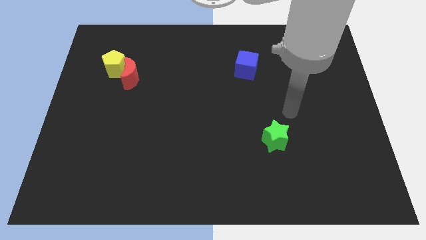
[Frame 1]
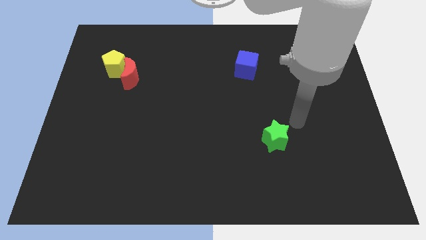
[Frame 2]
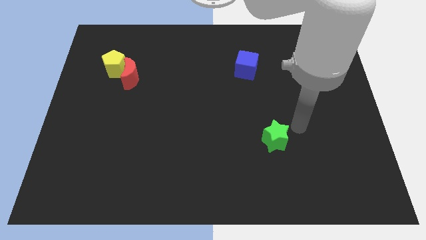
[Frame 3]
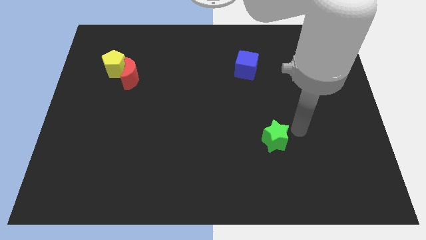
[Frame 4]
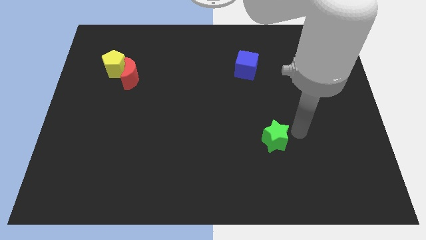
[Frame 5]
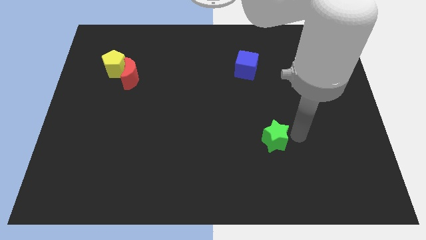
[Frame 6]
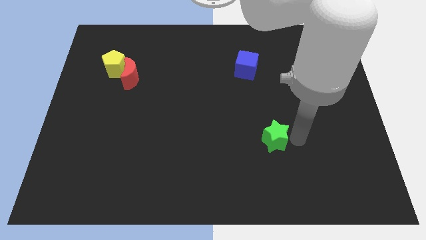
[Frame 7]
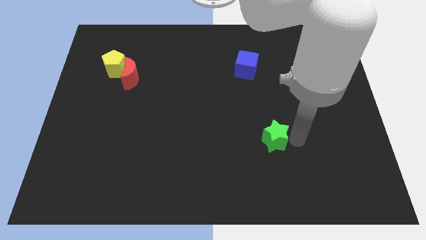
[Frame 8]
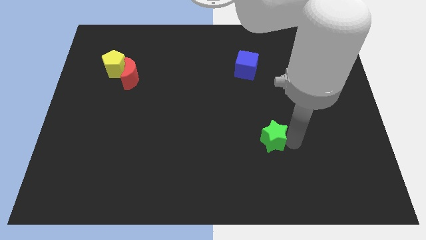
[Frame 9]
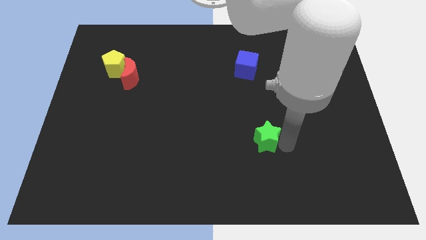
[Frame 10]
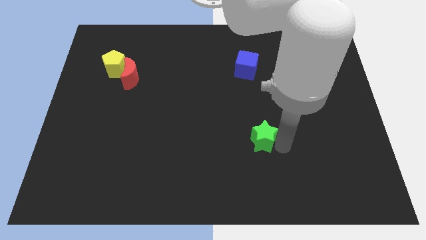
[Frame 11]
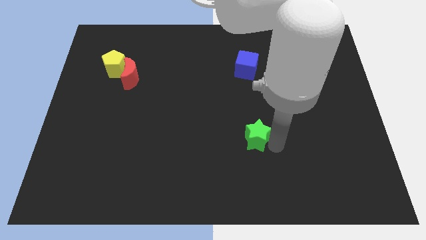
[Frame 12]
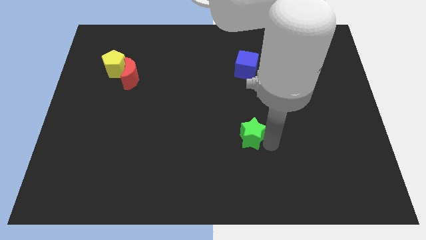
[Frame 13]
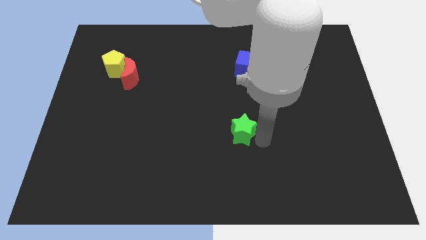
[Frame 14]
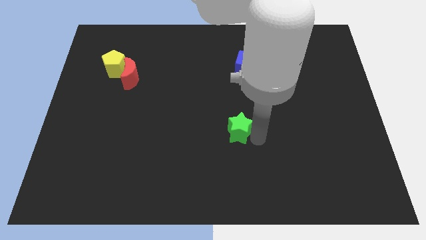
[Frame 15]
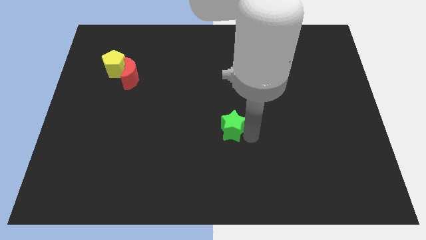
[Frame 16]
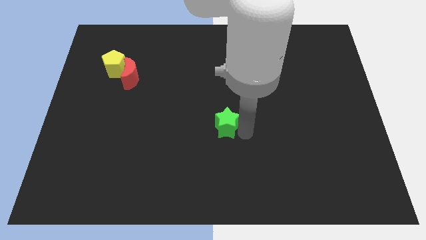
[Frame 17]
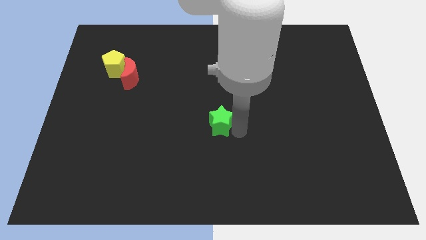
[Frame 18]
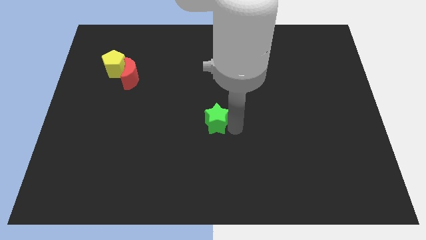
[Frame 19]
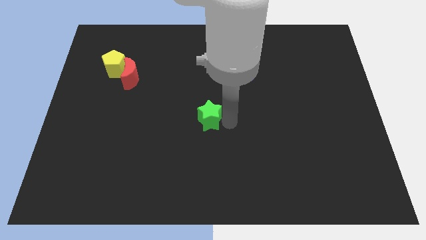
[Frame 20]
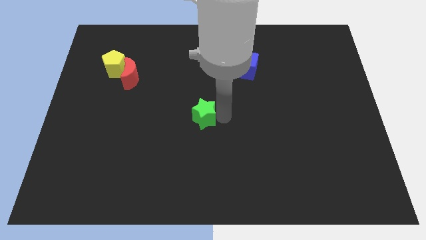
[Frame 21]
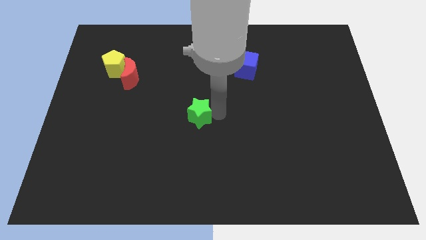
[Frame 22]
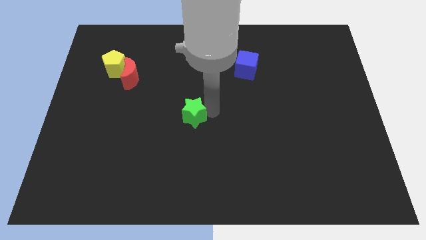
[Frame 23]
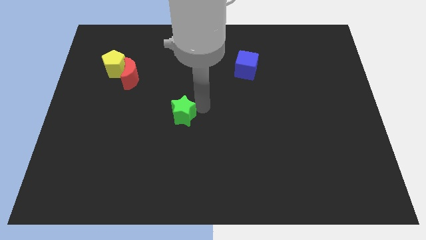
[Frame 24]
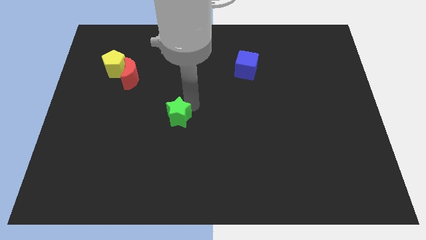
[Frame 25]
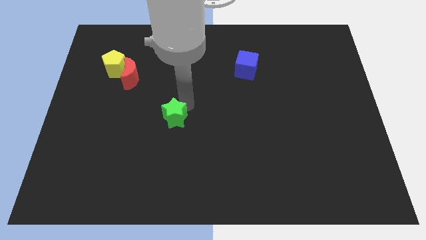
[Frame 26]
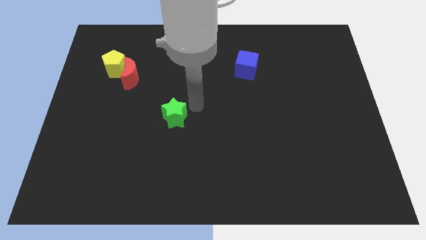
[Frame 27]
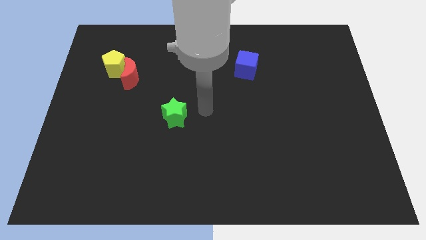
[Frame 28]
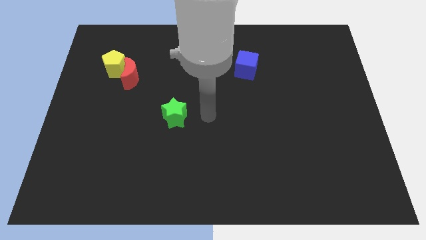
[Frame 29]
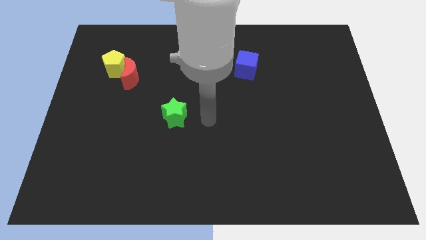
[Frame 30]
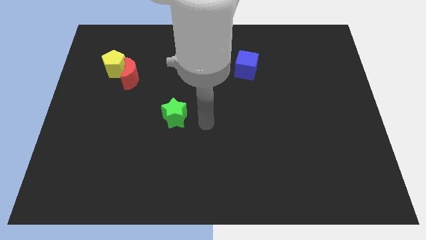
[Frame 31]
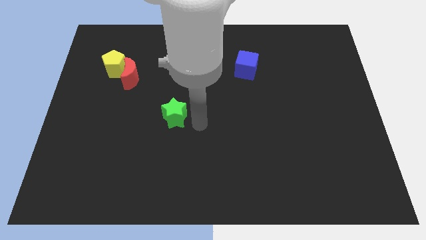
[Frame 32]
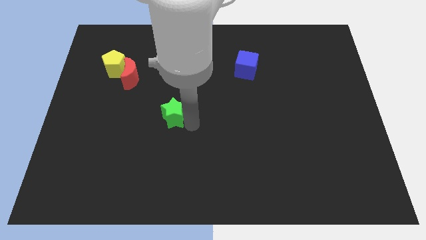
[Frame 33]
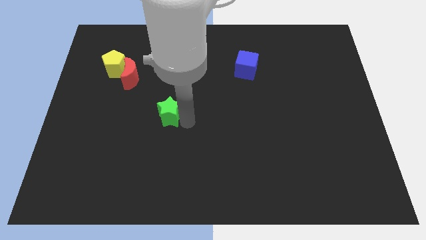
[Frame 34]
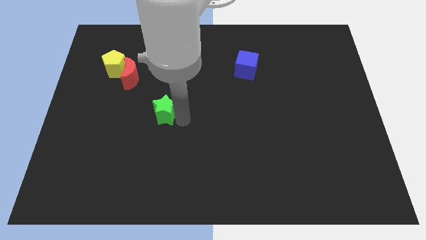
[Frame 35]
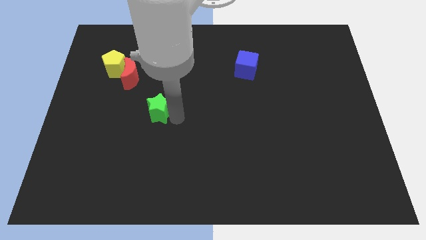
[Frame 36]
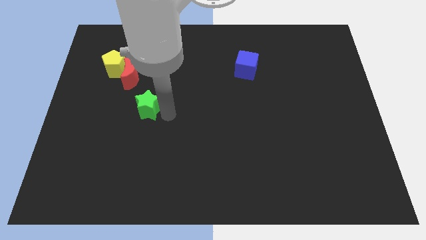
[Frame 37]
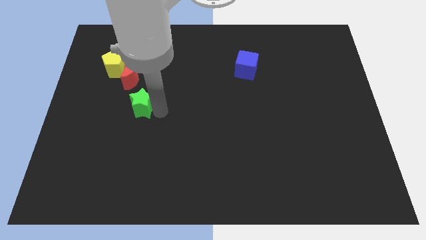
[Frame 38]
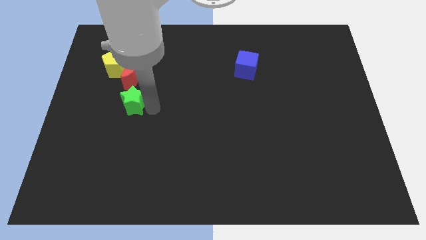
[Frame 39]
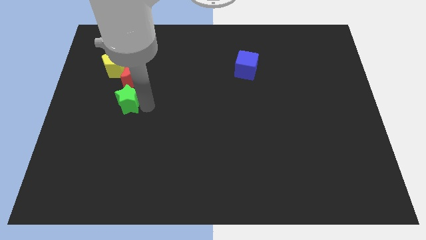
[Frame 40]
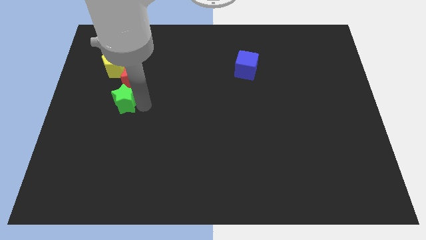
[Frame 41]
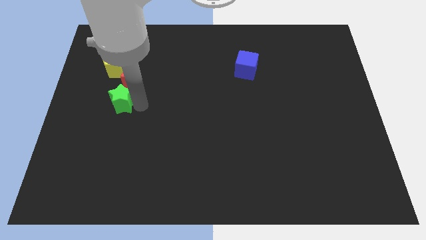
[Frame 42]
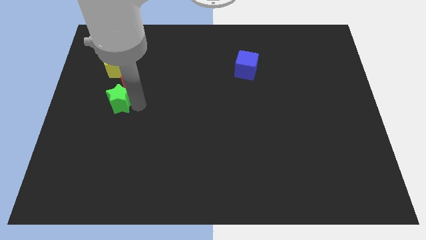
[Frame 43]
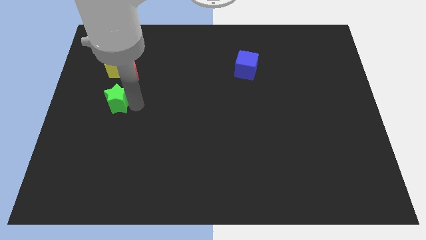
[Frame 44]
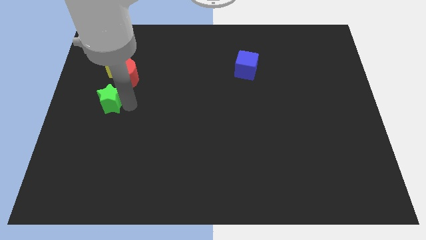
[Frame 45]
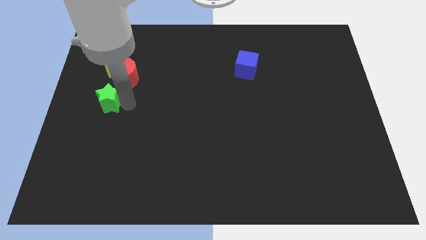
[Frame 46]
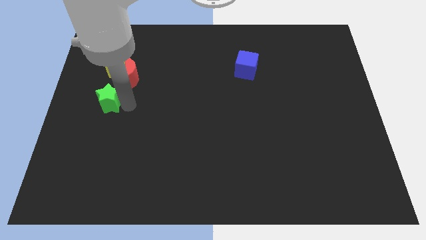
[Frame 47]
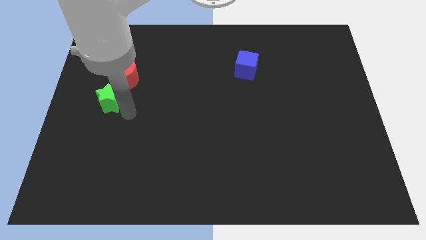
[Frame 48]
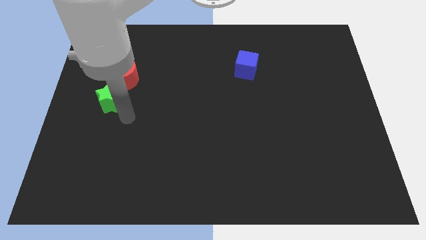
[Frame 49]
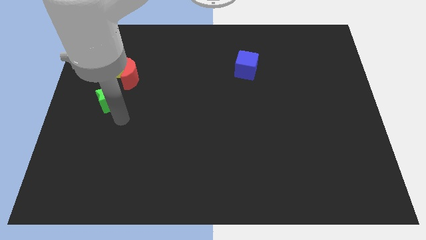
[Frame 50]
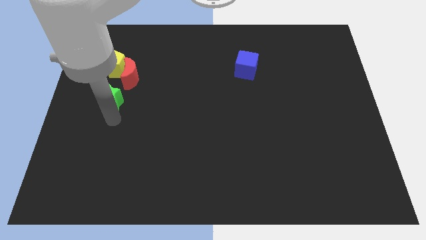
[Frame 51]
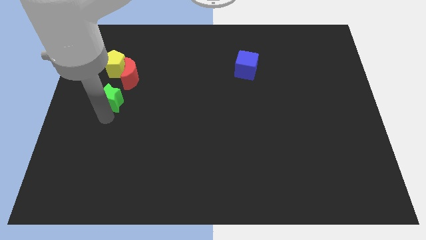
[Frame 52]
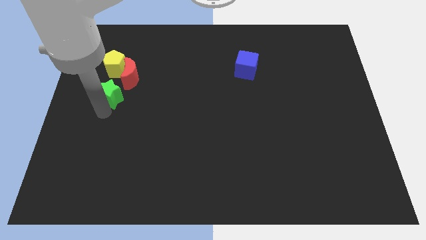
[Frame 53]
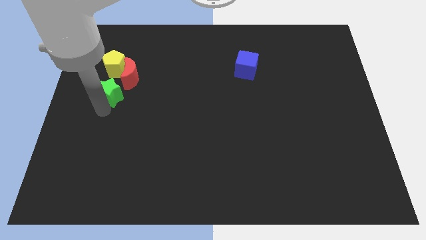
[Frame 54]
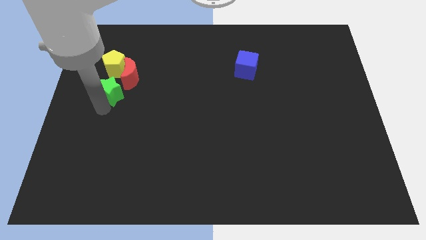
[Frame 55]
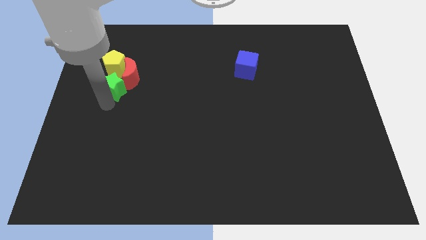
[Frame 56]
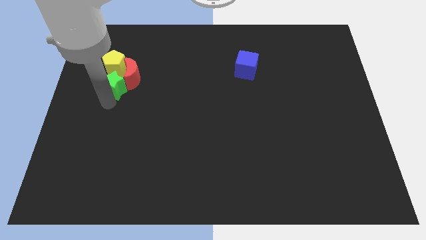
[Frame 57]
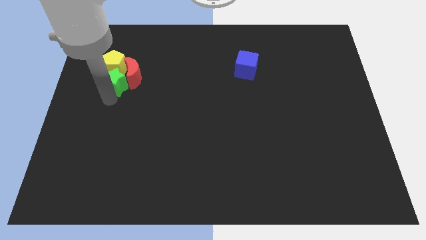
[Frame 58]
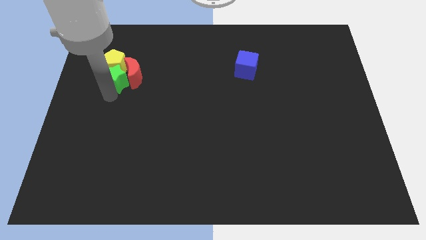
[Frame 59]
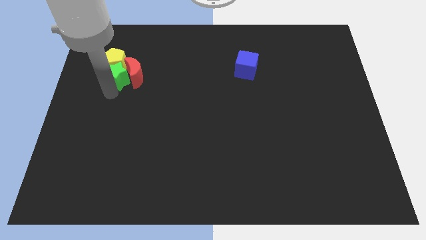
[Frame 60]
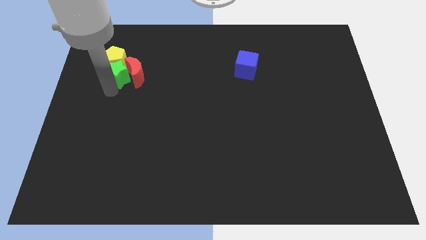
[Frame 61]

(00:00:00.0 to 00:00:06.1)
move the star to the pentagon

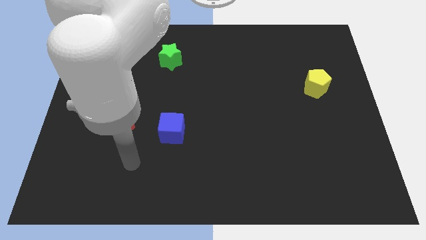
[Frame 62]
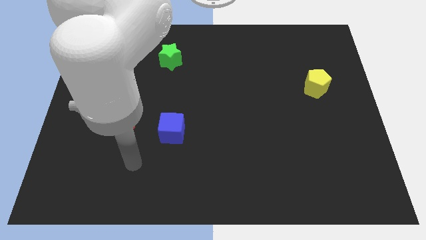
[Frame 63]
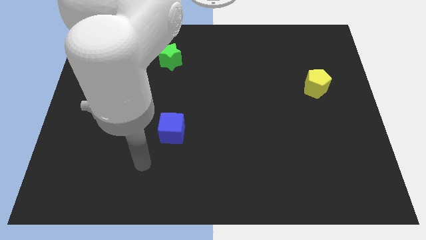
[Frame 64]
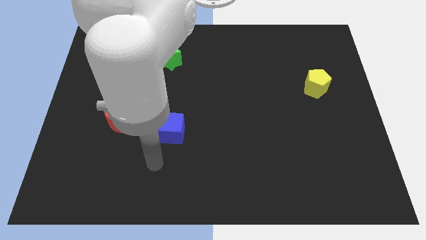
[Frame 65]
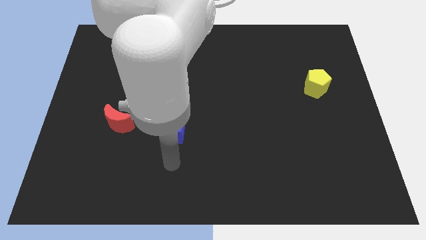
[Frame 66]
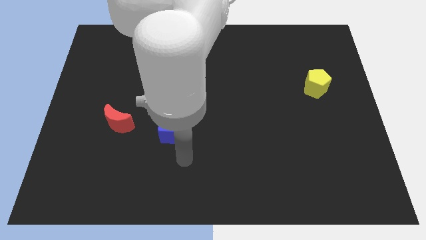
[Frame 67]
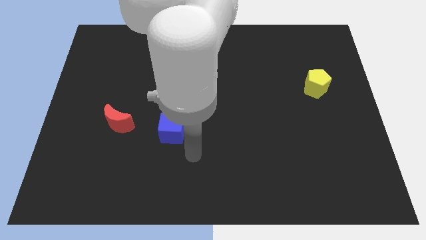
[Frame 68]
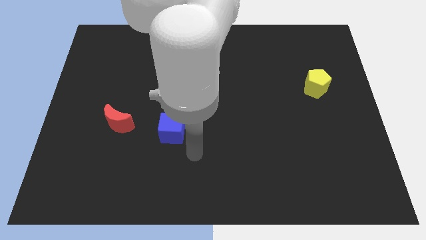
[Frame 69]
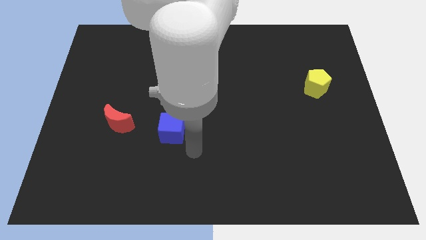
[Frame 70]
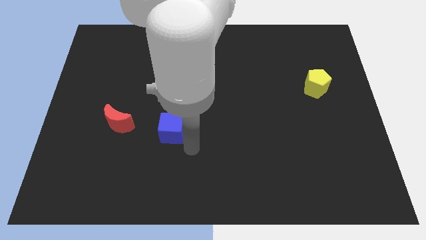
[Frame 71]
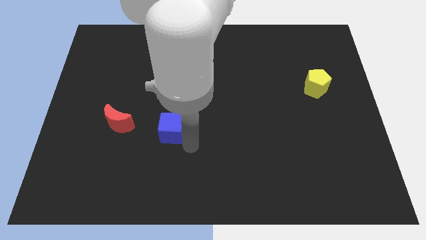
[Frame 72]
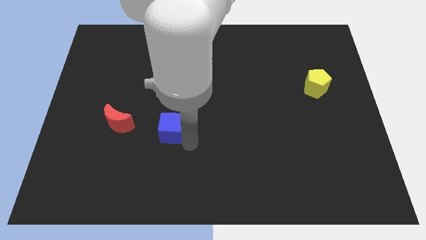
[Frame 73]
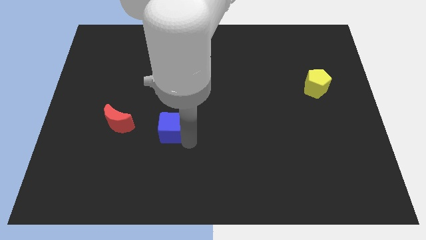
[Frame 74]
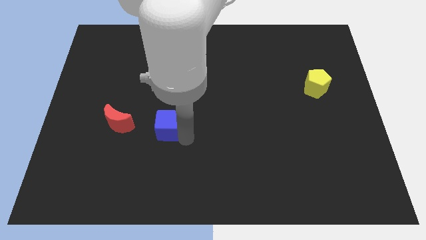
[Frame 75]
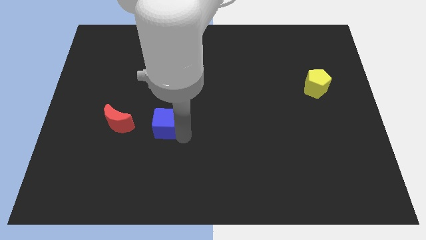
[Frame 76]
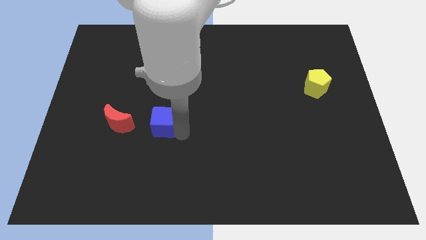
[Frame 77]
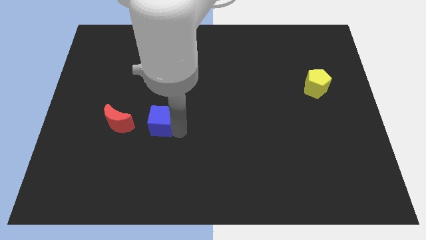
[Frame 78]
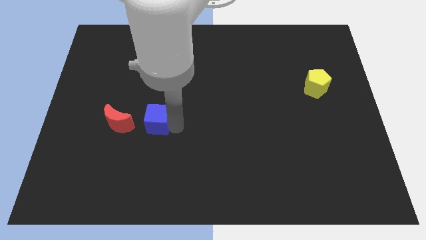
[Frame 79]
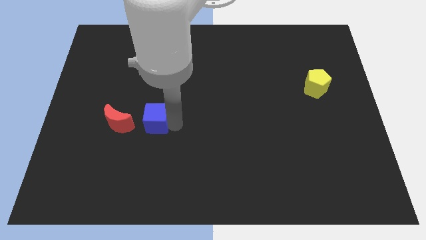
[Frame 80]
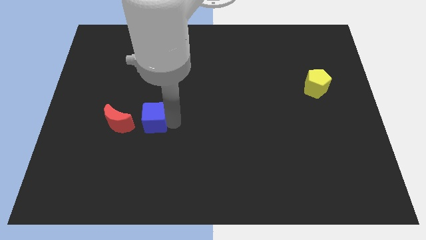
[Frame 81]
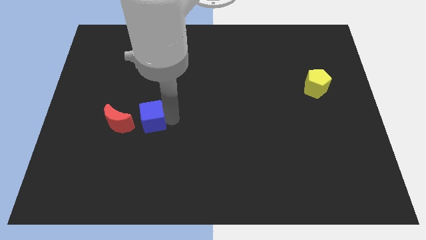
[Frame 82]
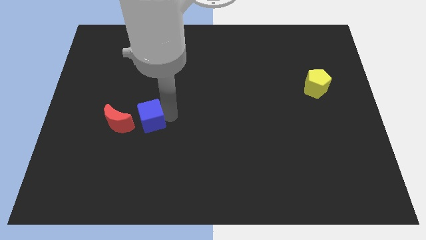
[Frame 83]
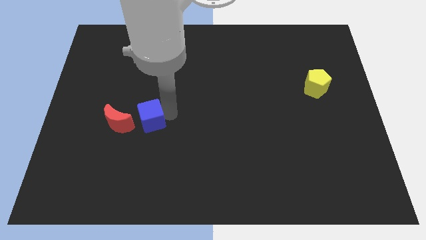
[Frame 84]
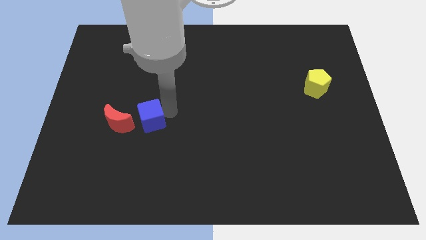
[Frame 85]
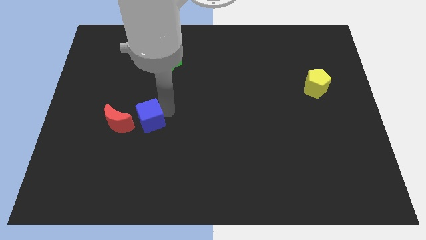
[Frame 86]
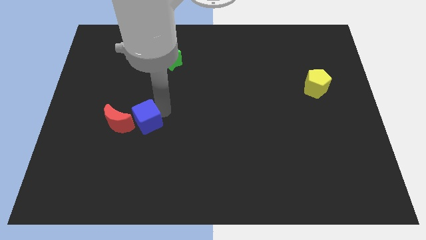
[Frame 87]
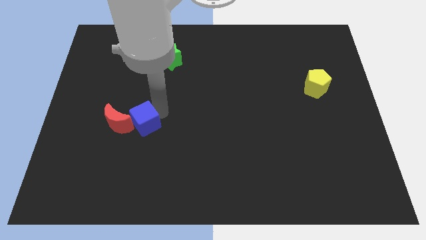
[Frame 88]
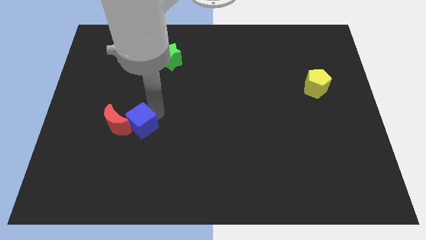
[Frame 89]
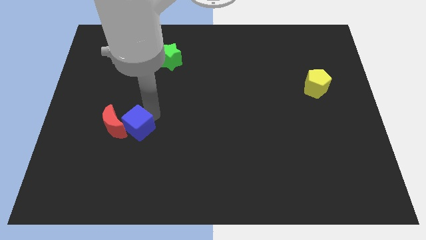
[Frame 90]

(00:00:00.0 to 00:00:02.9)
move the blue block to the moon
